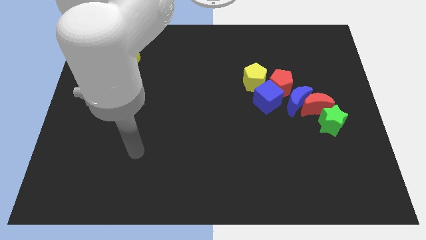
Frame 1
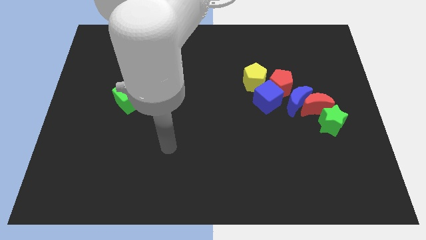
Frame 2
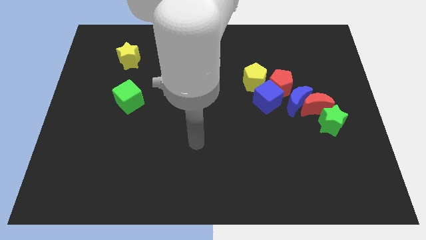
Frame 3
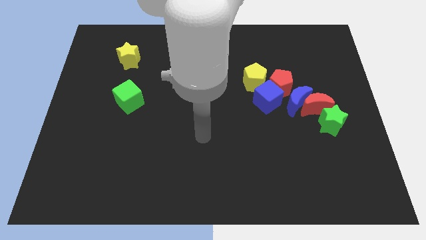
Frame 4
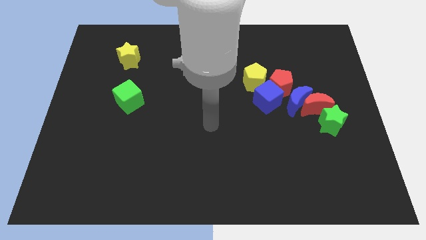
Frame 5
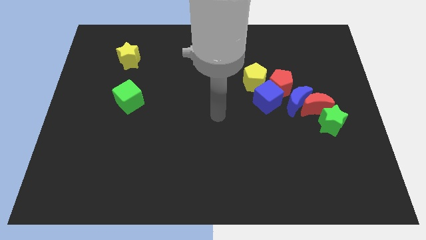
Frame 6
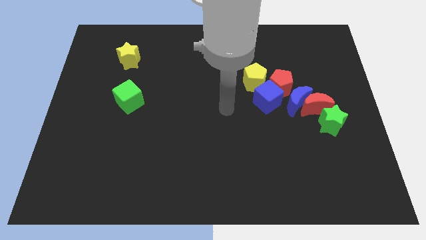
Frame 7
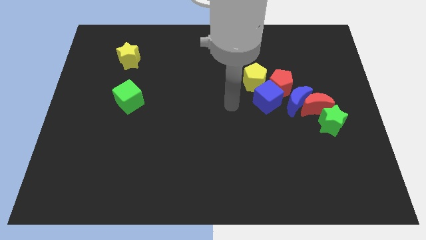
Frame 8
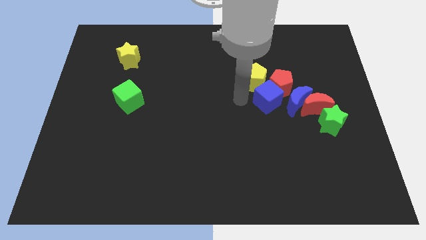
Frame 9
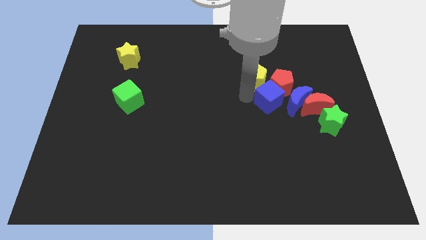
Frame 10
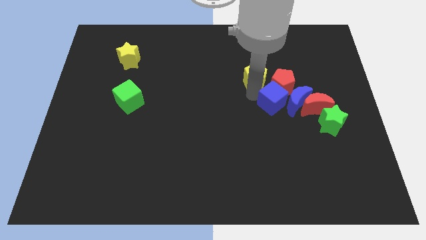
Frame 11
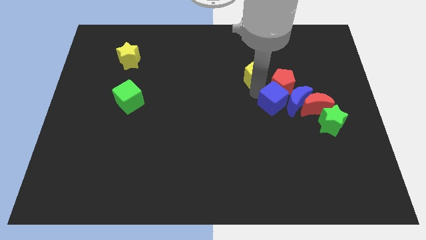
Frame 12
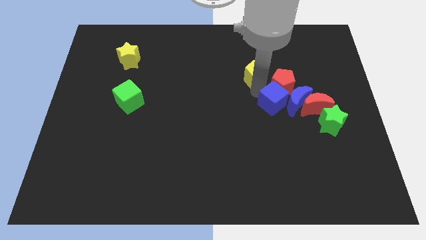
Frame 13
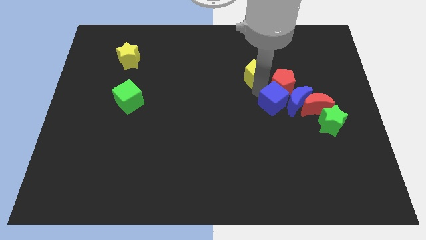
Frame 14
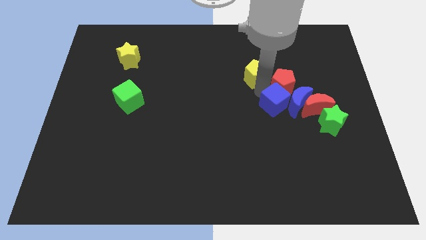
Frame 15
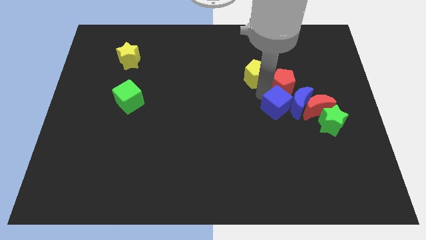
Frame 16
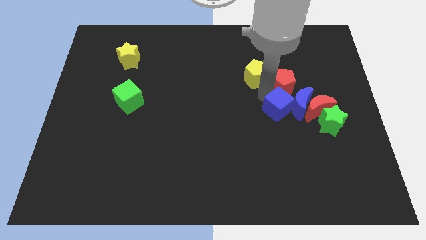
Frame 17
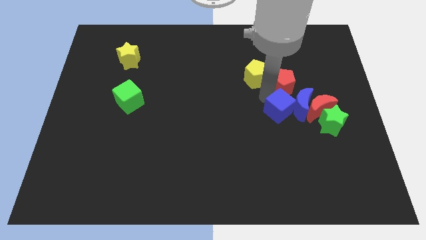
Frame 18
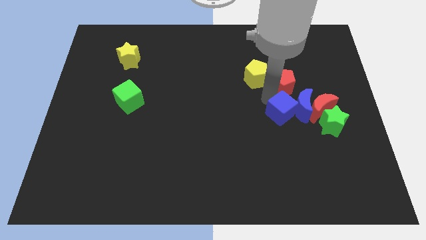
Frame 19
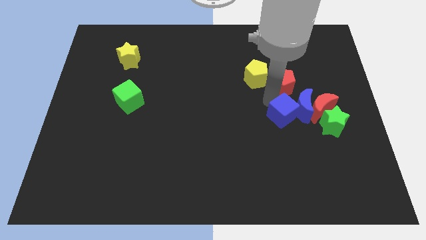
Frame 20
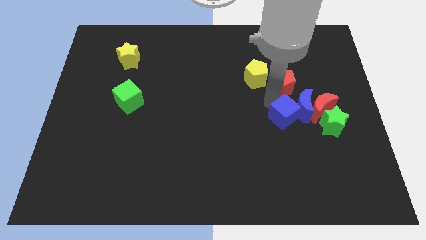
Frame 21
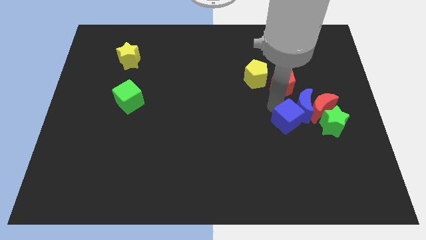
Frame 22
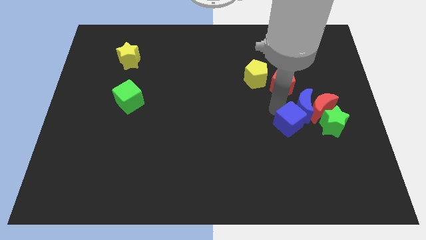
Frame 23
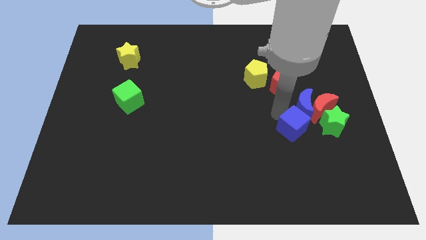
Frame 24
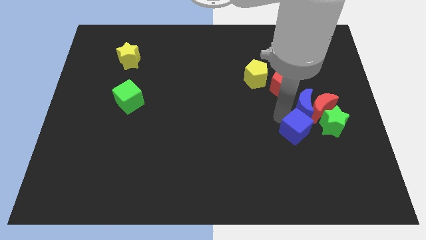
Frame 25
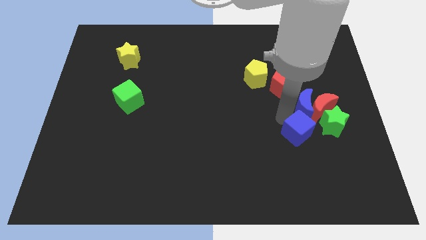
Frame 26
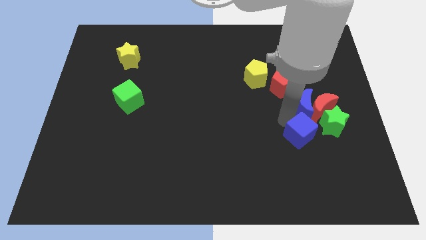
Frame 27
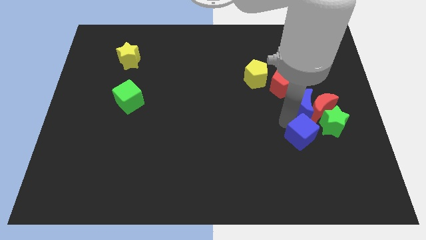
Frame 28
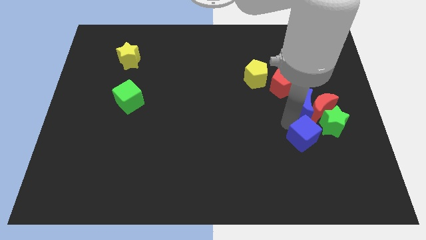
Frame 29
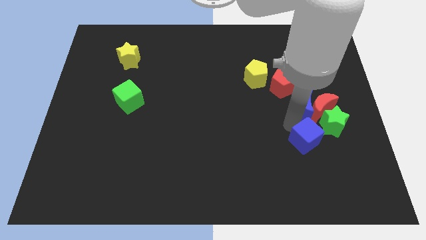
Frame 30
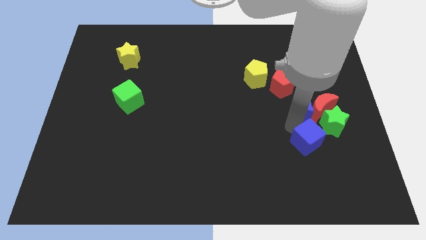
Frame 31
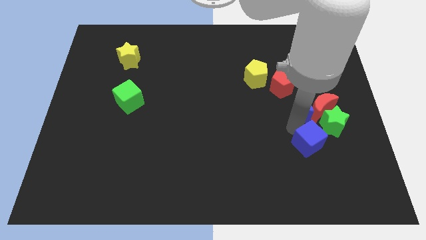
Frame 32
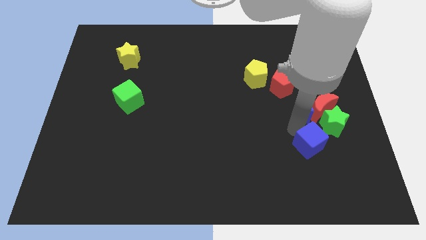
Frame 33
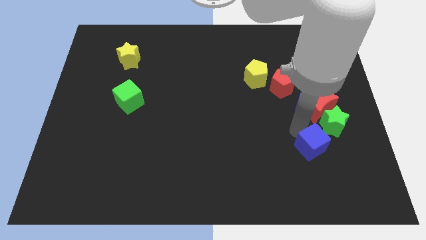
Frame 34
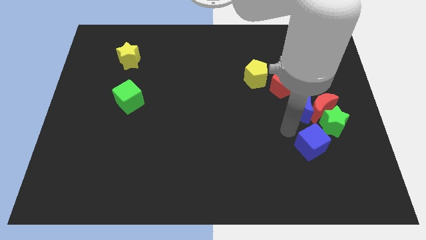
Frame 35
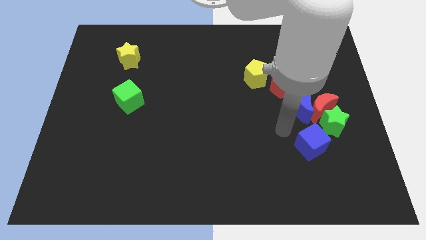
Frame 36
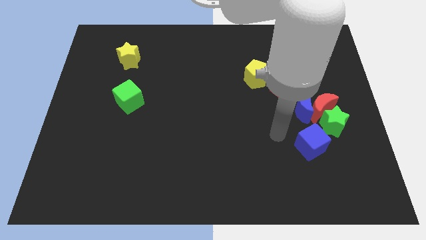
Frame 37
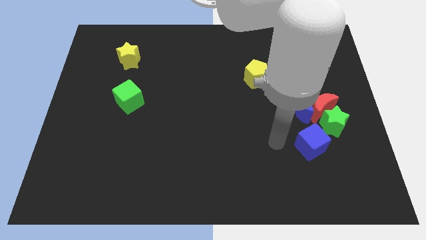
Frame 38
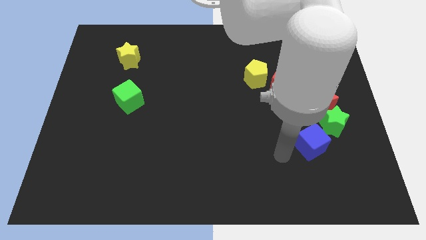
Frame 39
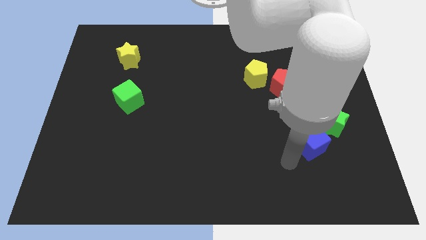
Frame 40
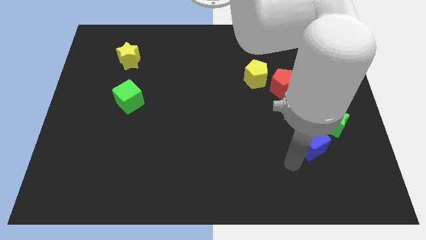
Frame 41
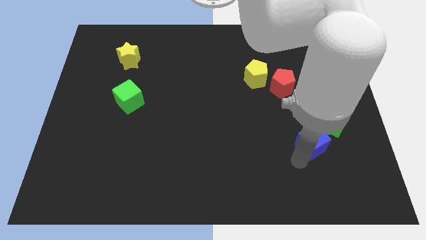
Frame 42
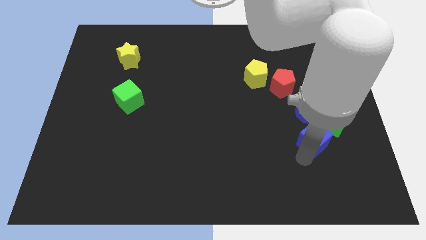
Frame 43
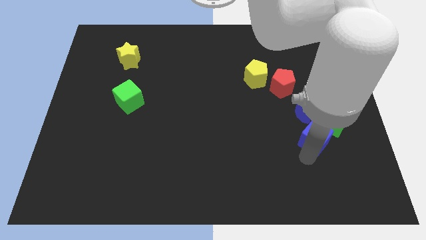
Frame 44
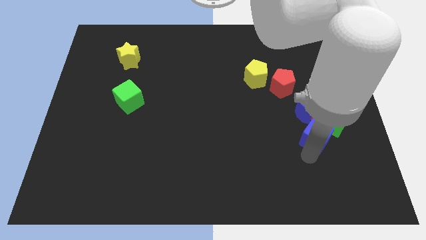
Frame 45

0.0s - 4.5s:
push the blue cube towards the green star

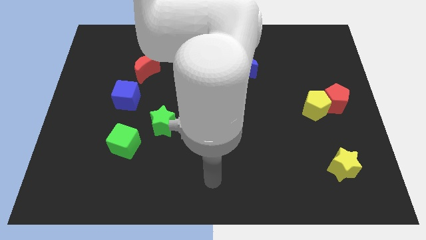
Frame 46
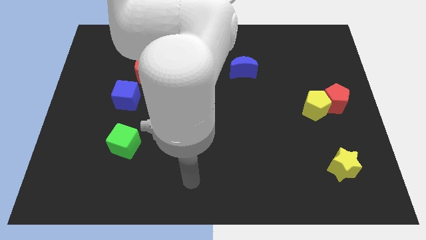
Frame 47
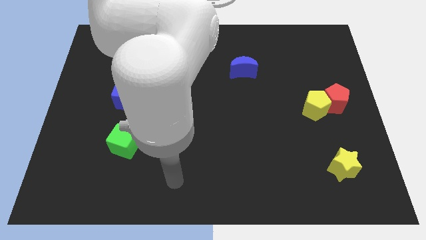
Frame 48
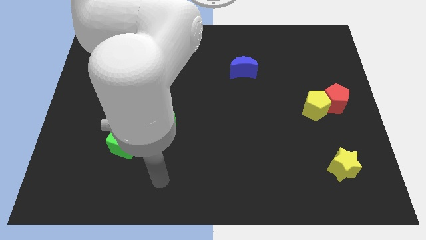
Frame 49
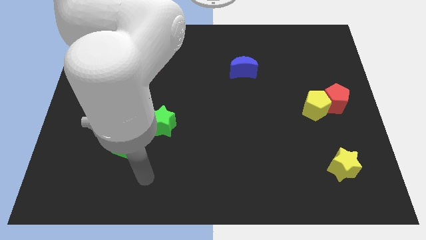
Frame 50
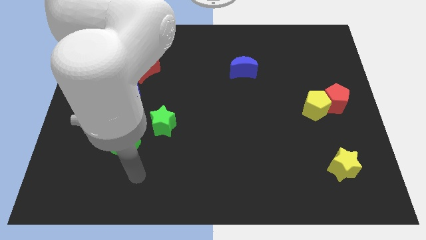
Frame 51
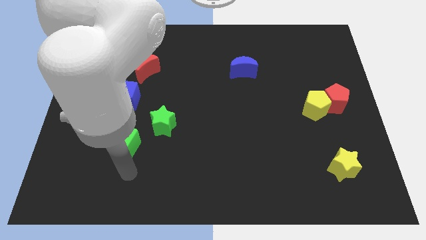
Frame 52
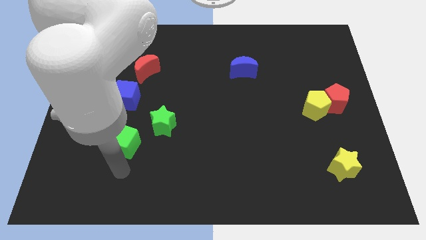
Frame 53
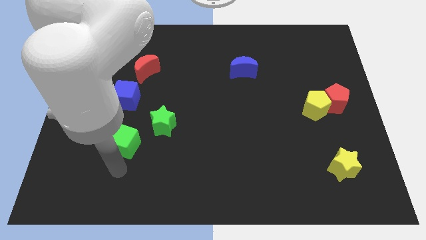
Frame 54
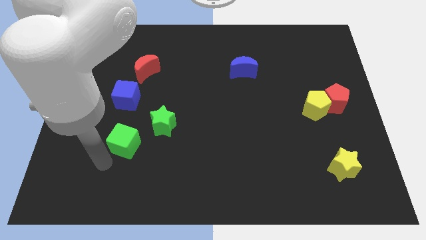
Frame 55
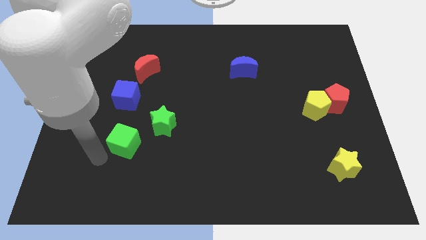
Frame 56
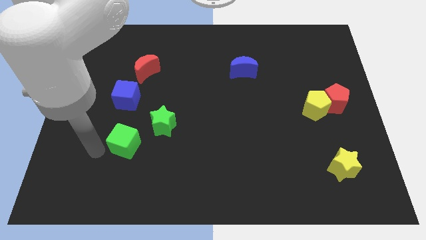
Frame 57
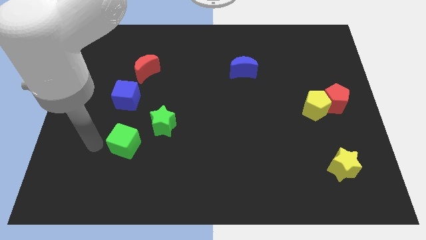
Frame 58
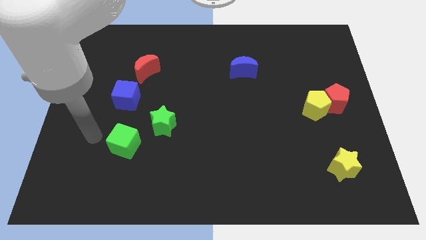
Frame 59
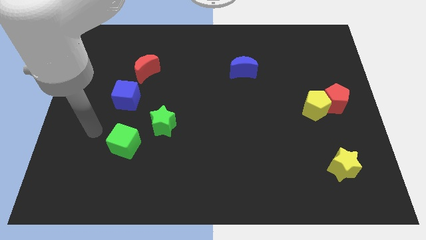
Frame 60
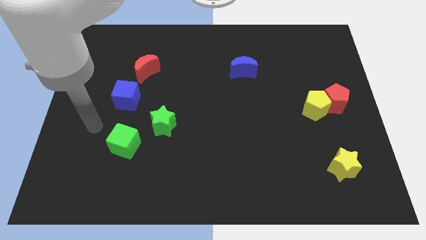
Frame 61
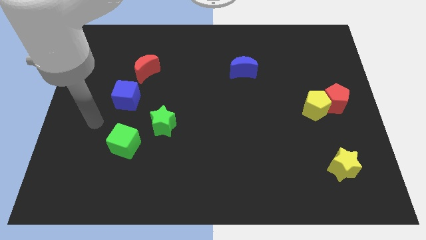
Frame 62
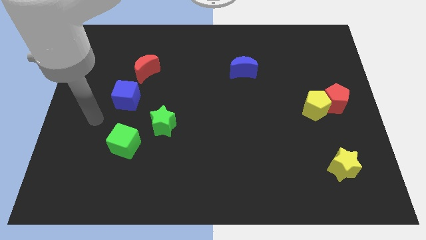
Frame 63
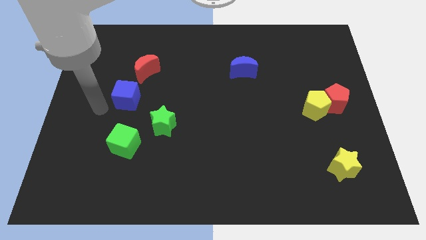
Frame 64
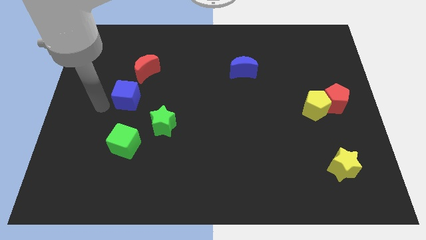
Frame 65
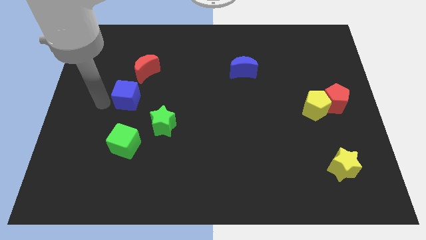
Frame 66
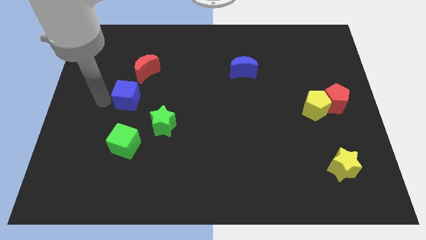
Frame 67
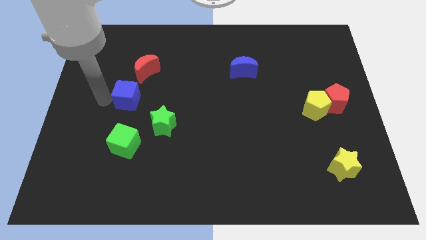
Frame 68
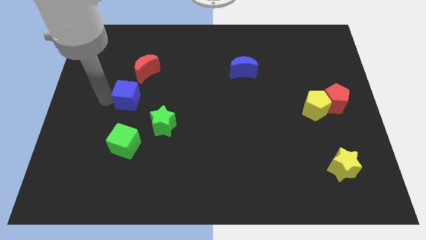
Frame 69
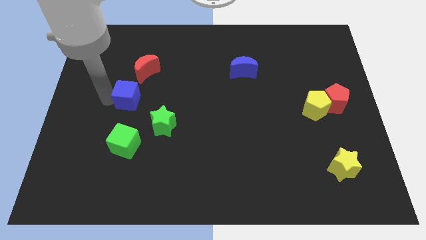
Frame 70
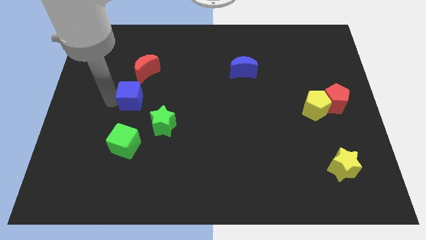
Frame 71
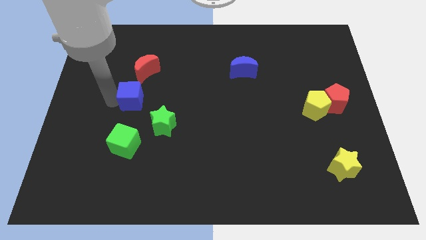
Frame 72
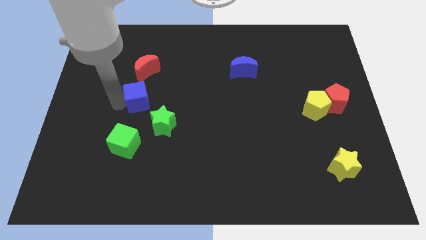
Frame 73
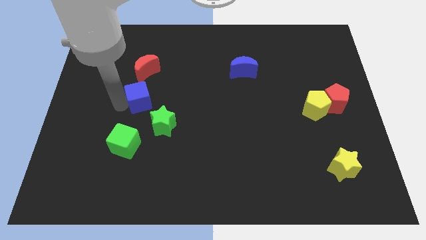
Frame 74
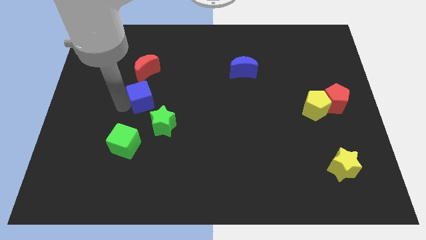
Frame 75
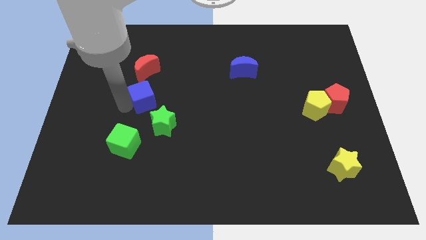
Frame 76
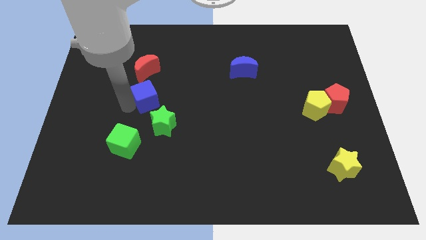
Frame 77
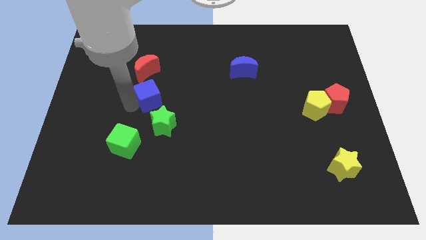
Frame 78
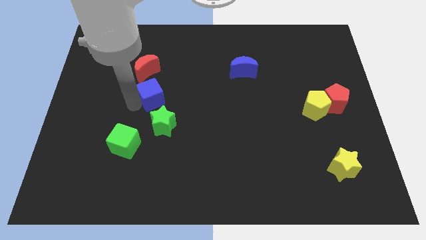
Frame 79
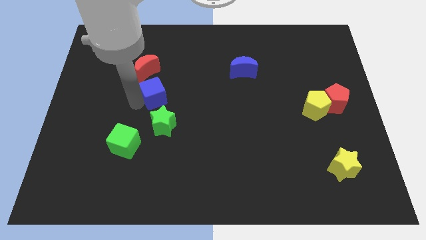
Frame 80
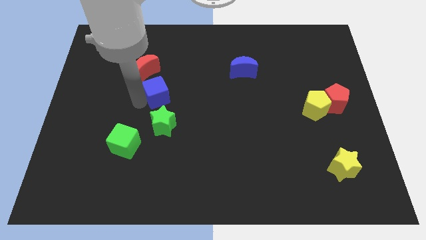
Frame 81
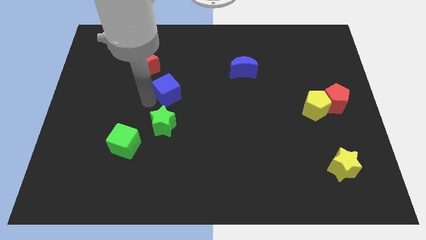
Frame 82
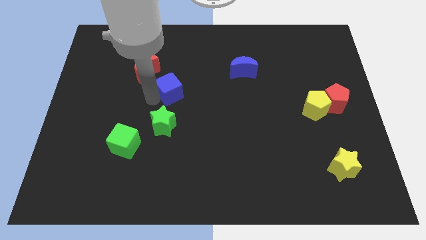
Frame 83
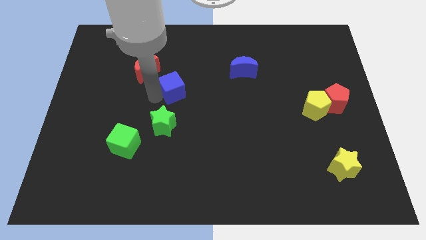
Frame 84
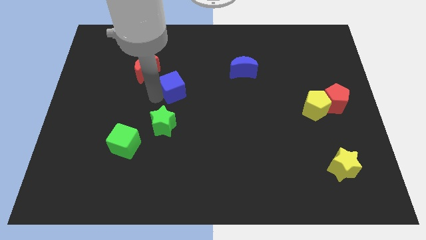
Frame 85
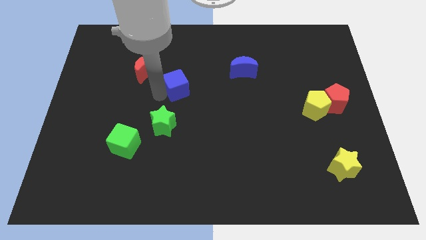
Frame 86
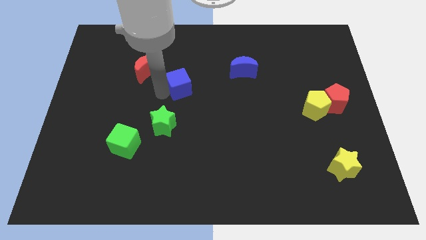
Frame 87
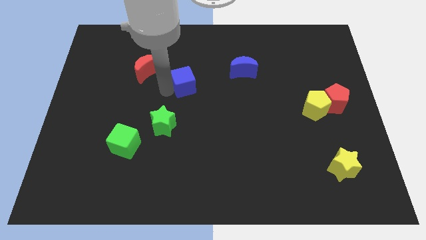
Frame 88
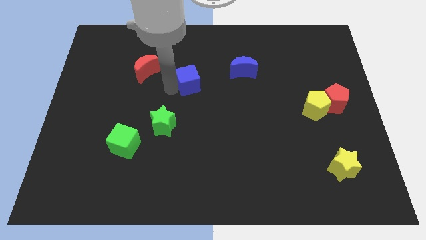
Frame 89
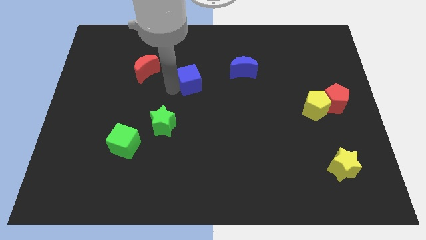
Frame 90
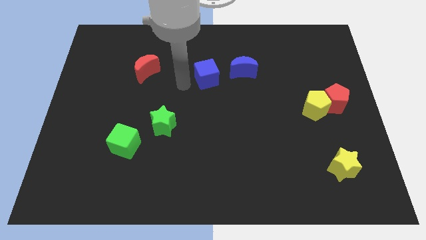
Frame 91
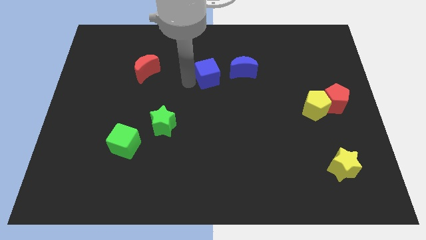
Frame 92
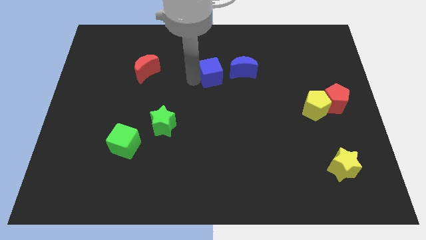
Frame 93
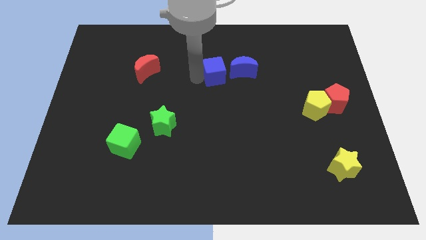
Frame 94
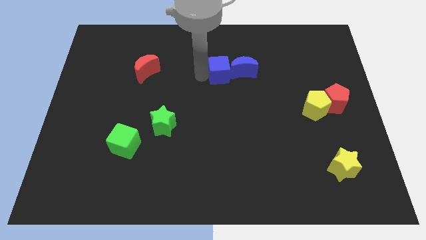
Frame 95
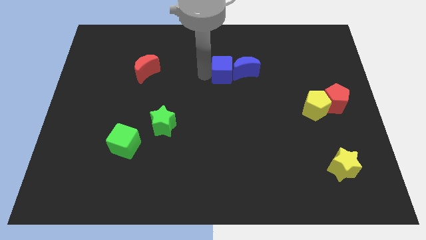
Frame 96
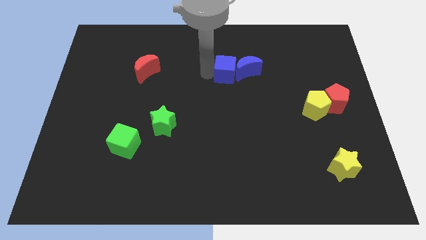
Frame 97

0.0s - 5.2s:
push the blue cube to the blue moon
